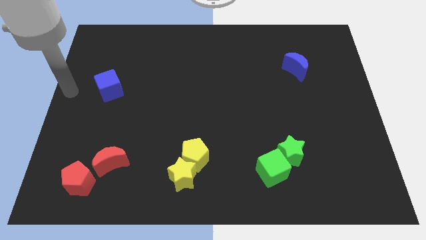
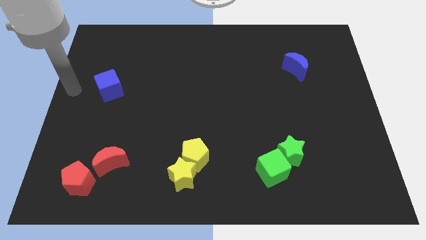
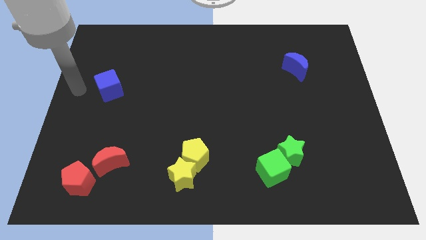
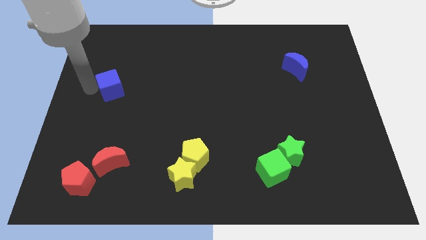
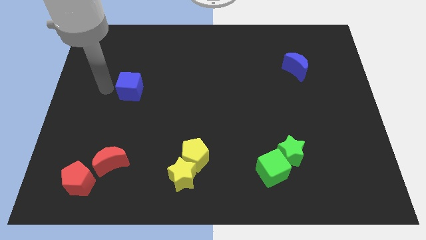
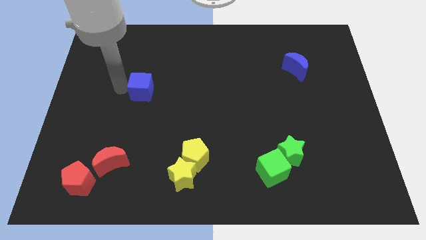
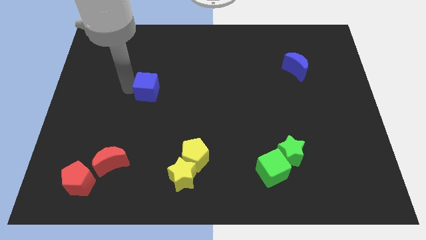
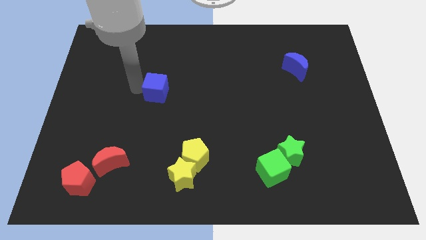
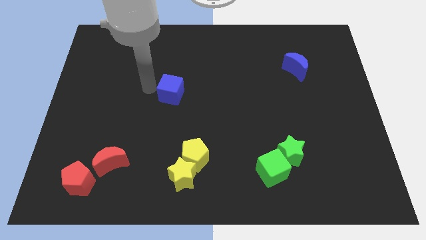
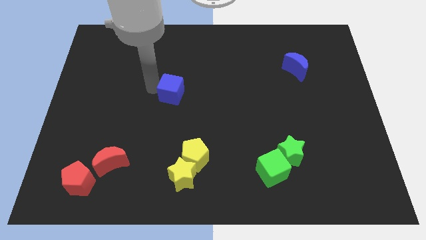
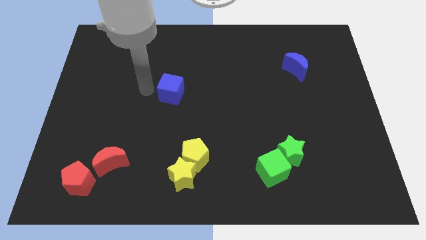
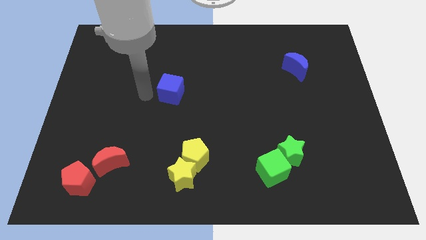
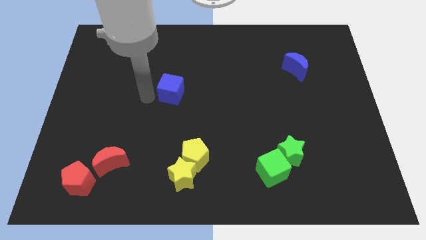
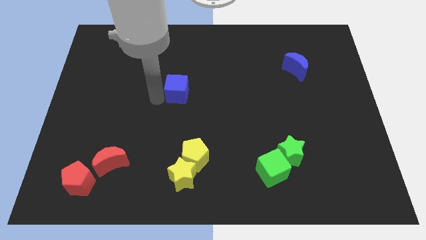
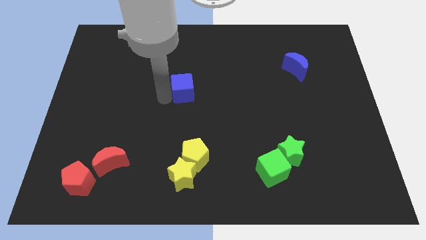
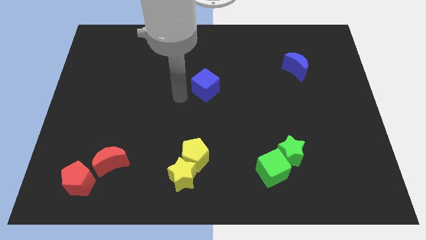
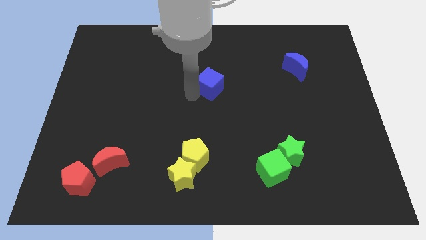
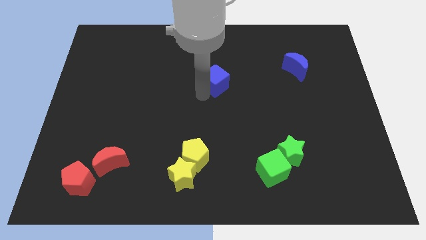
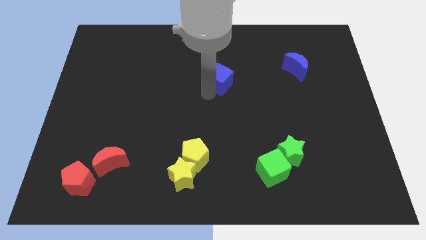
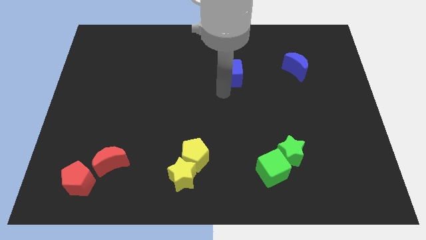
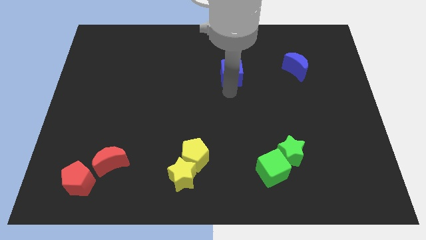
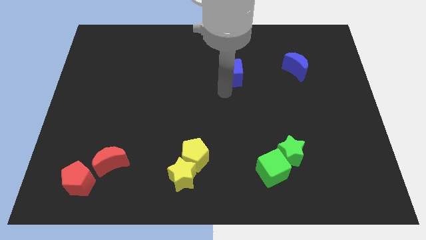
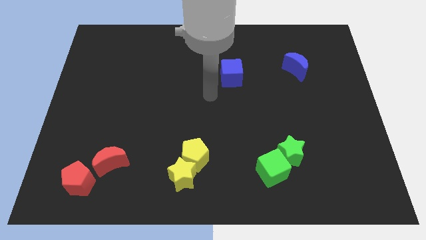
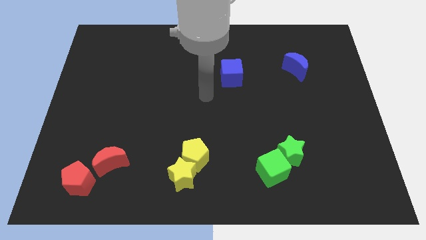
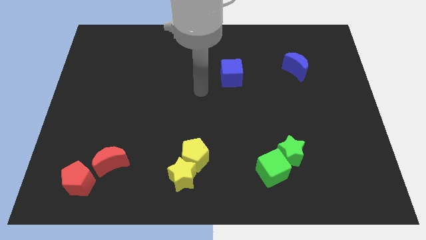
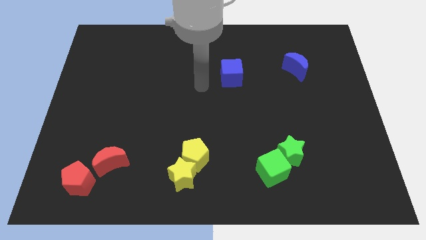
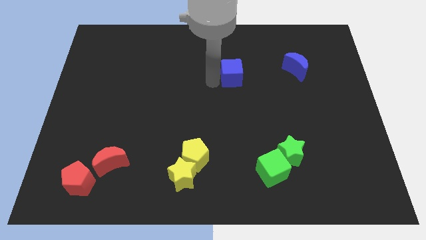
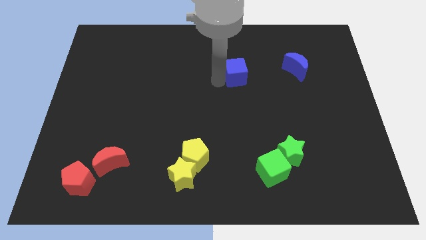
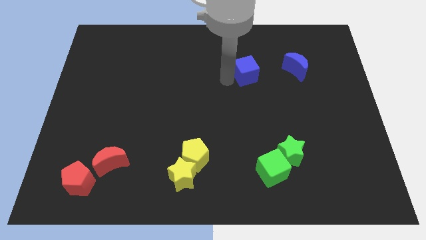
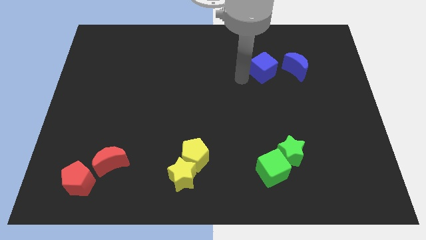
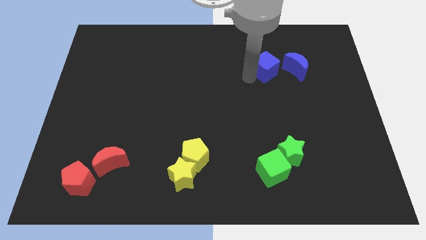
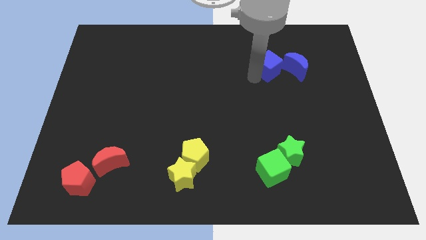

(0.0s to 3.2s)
move the blue cube towards the blue crescent

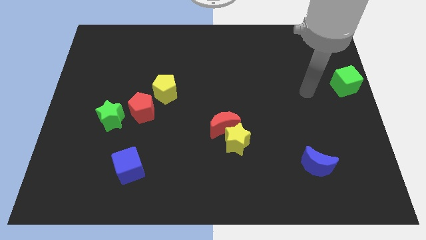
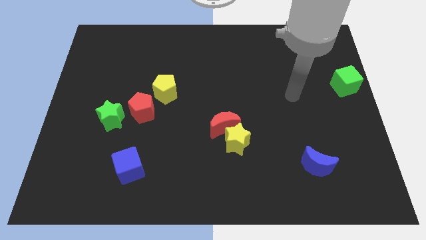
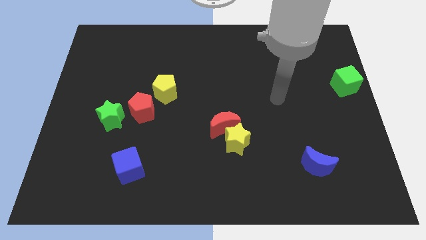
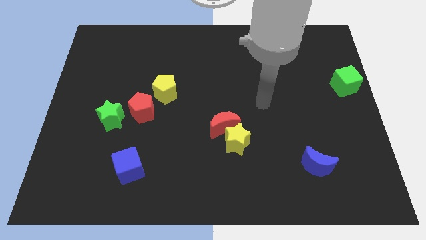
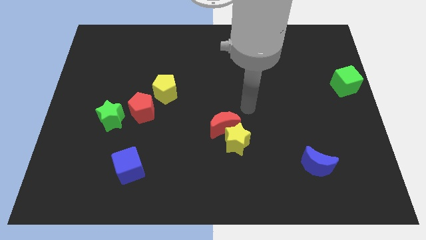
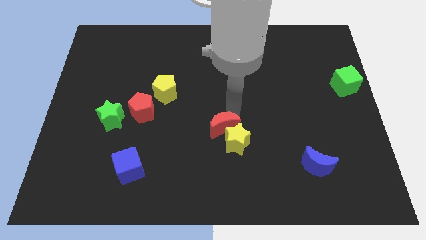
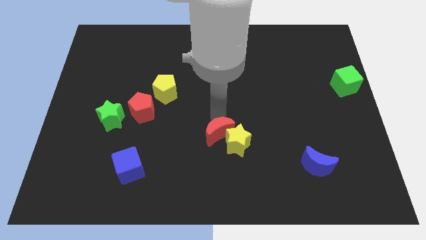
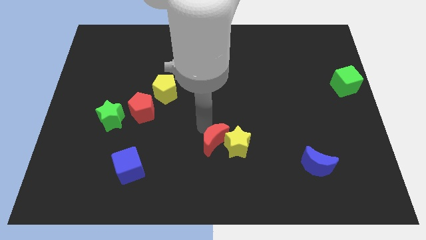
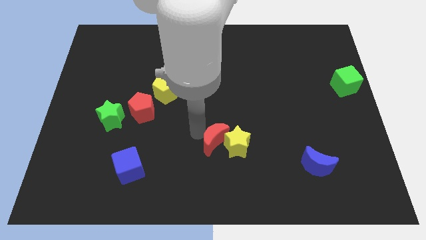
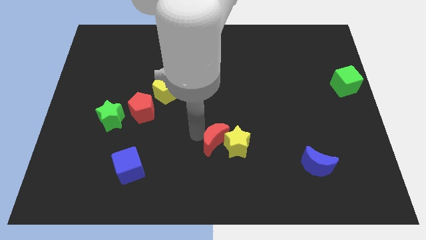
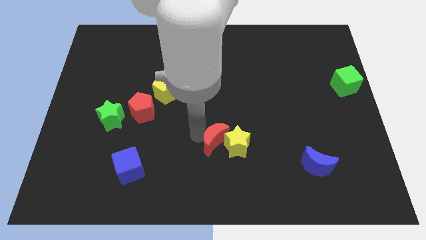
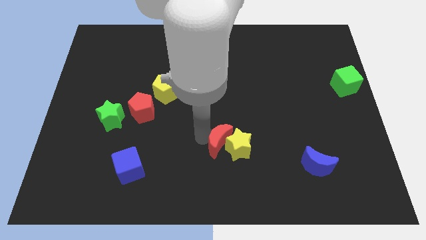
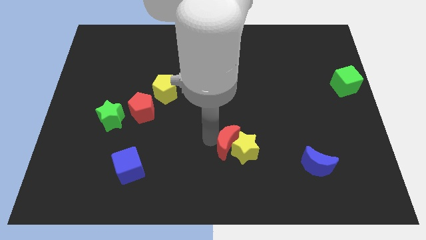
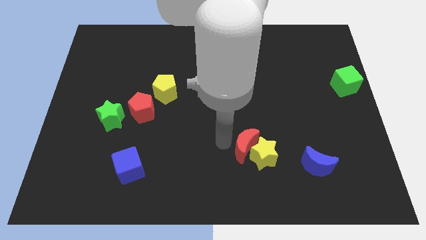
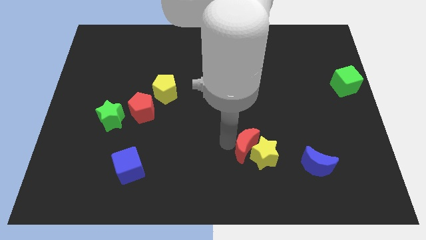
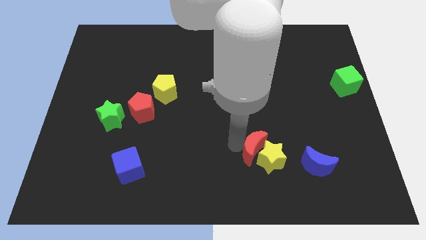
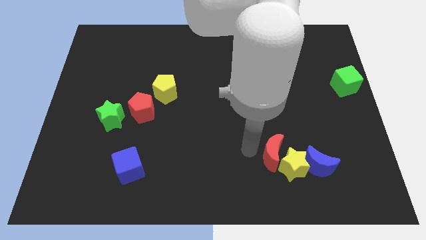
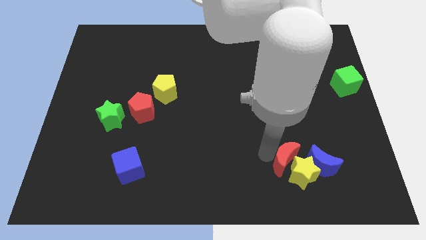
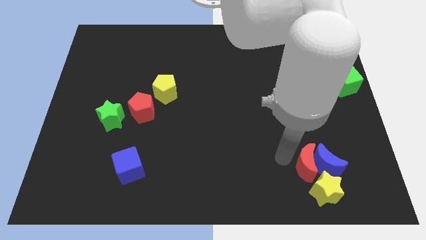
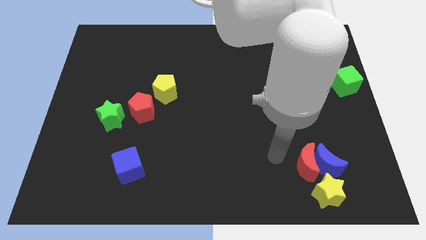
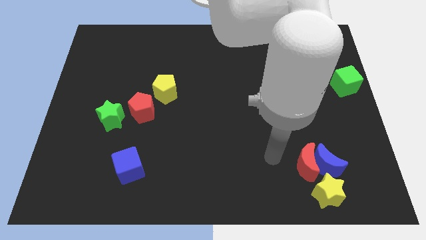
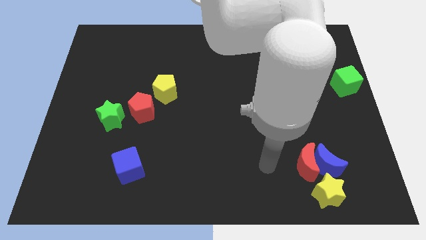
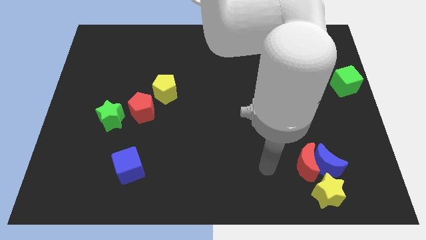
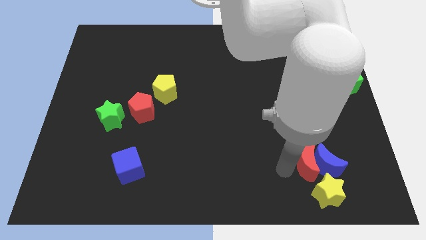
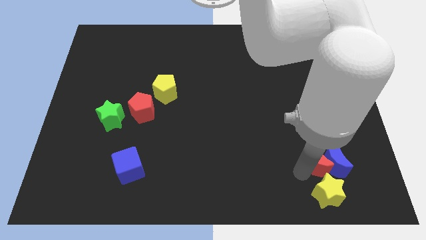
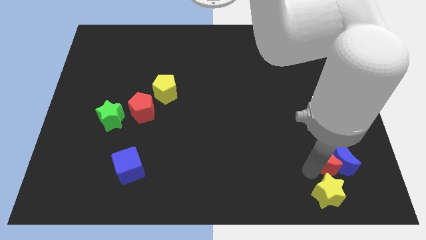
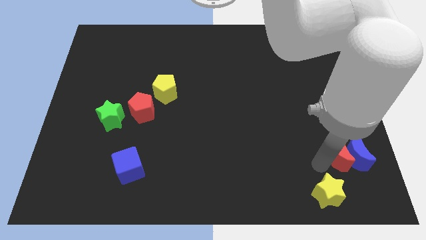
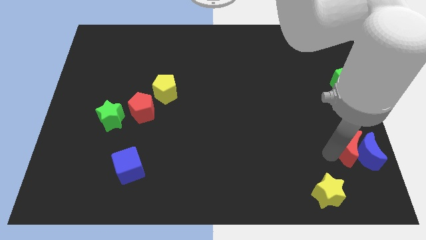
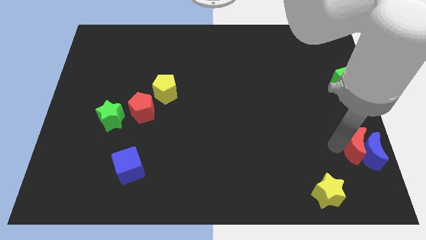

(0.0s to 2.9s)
push the yellow star towards the bottom right with red moon

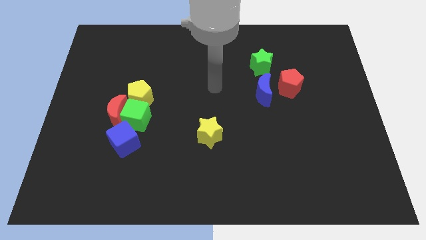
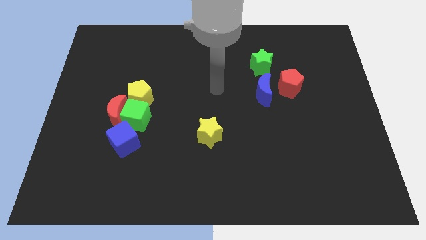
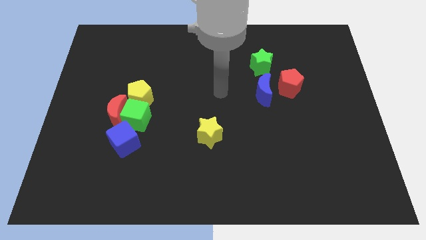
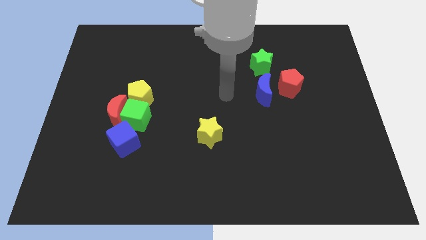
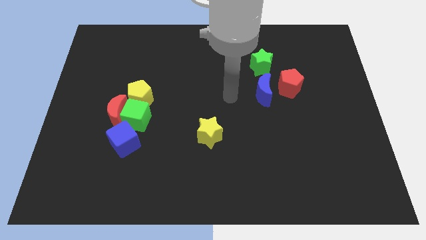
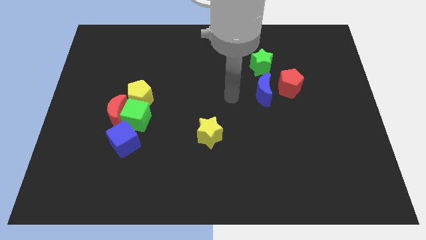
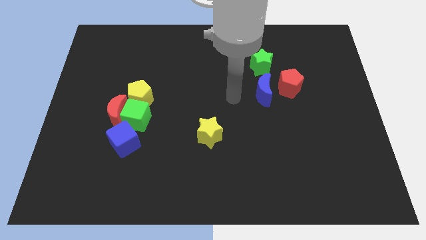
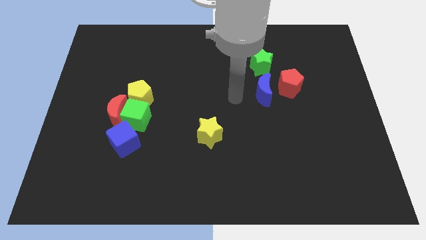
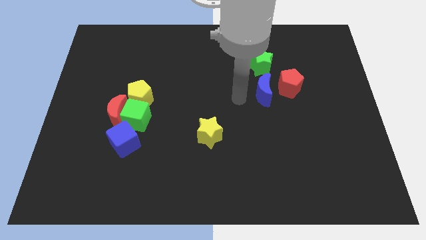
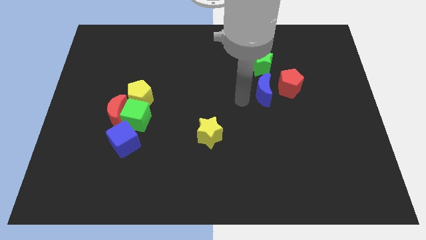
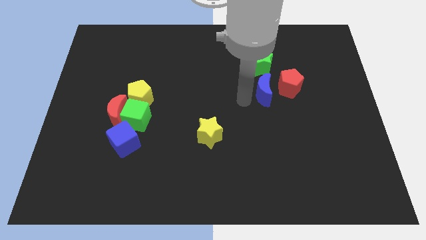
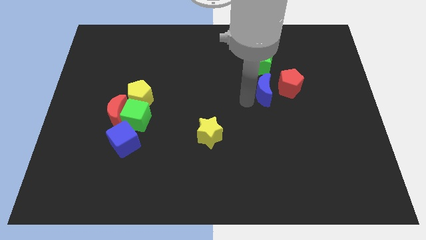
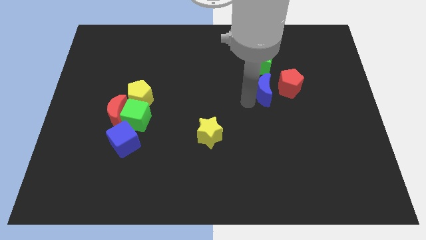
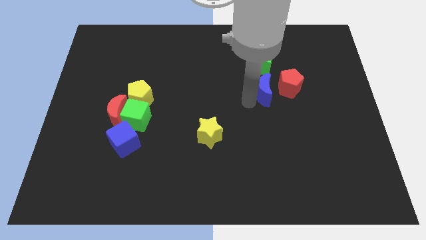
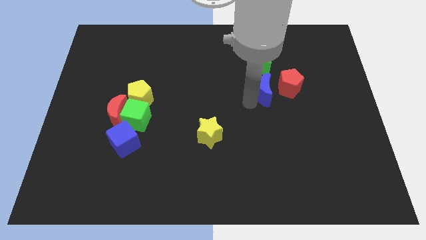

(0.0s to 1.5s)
place your arm to the left of blue moon

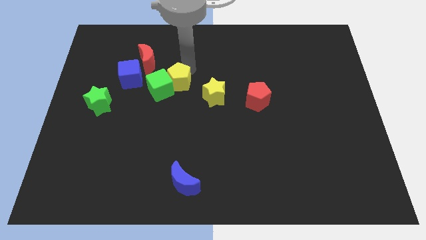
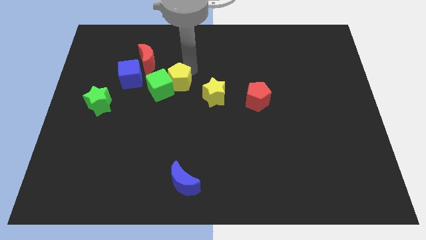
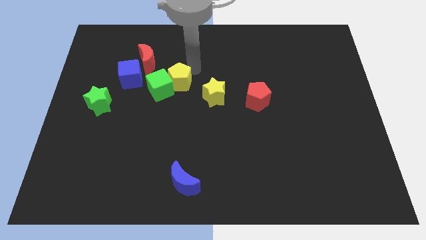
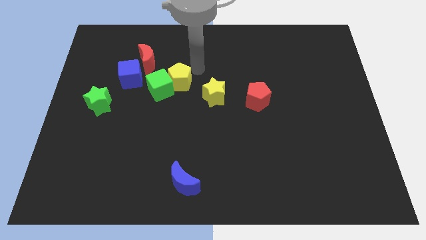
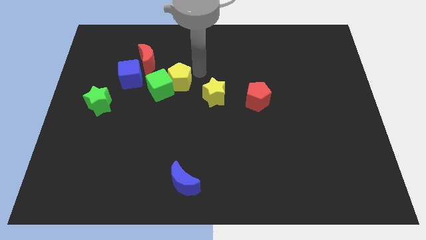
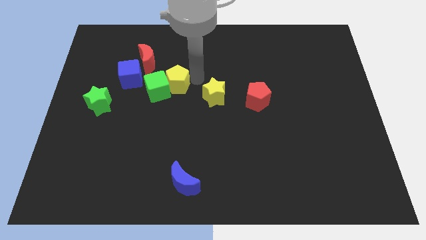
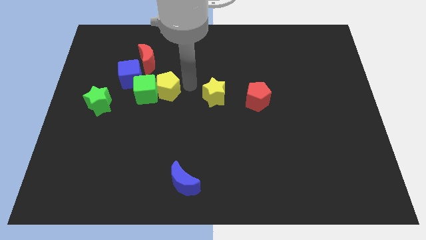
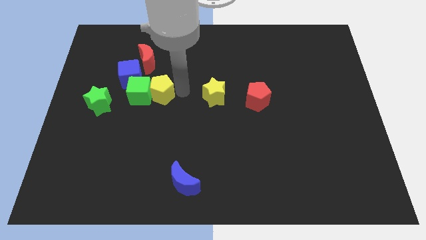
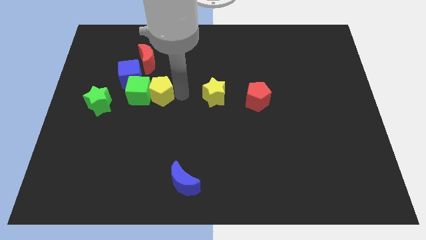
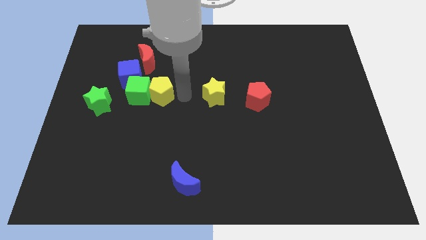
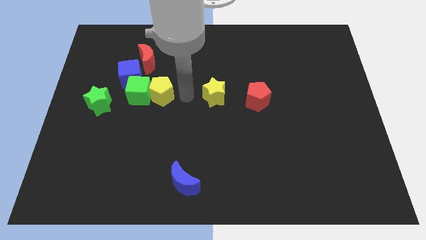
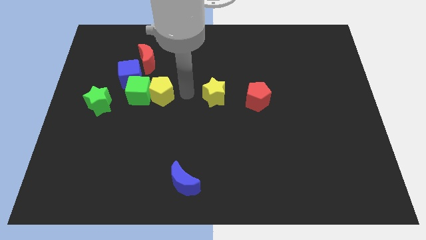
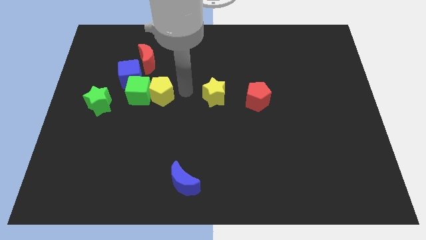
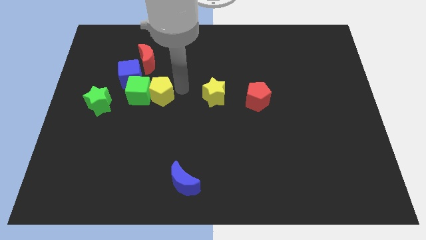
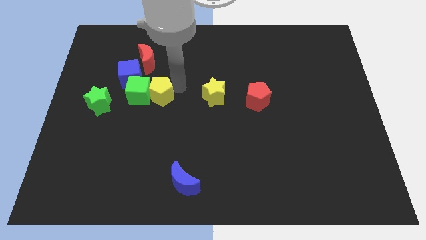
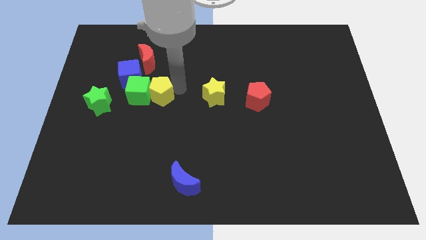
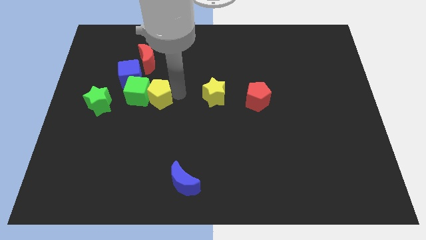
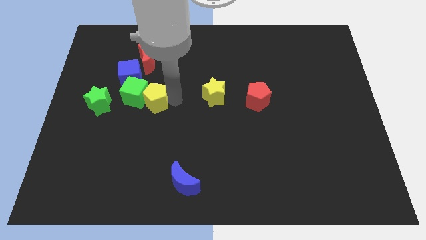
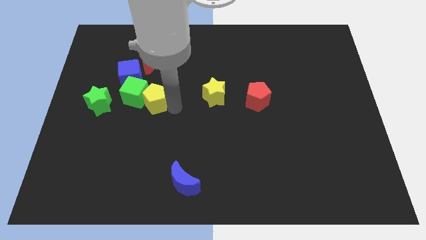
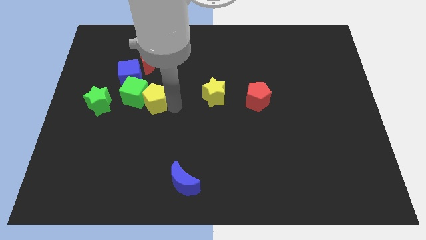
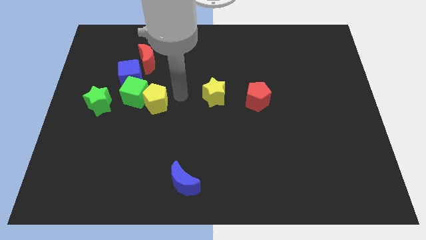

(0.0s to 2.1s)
move the green cube to the bottom of the blue cube
